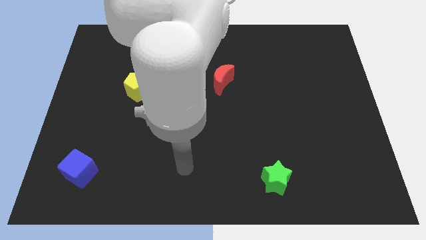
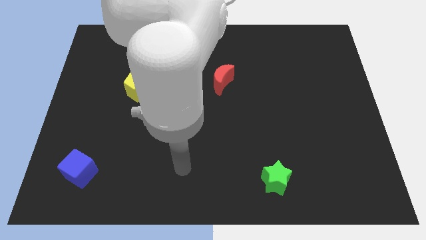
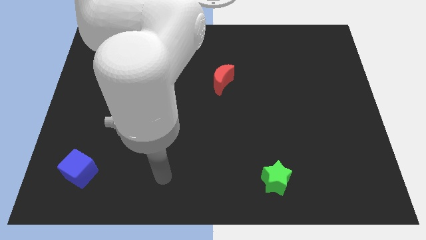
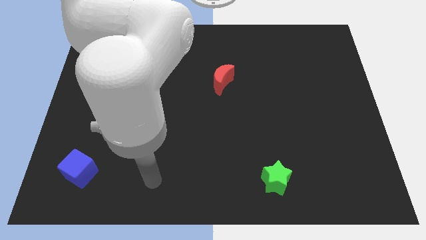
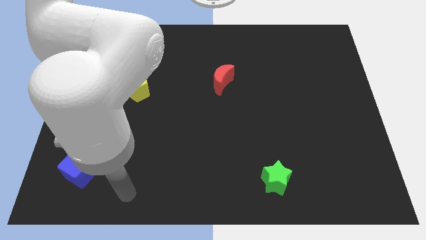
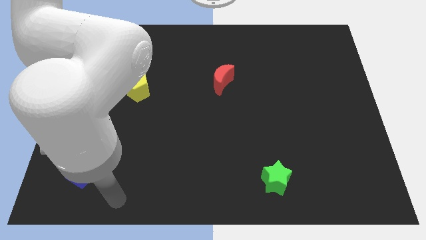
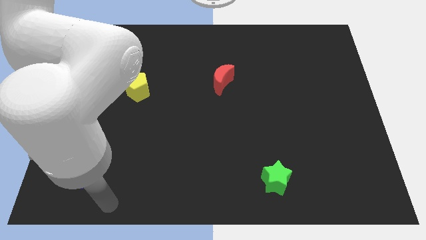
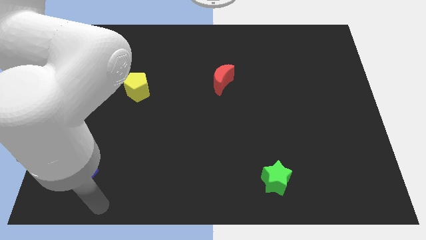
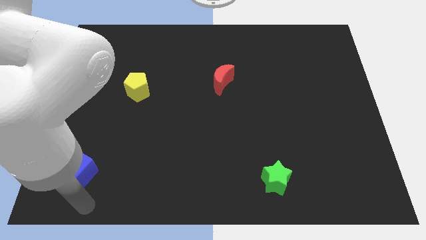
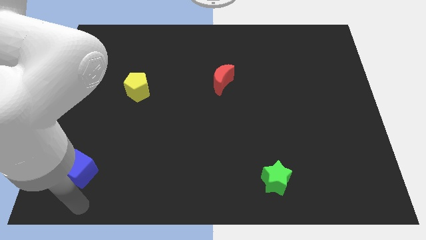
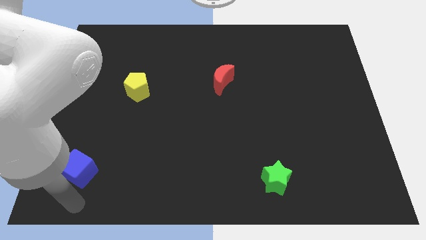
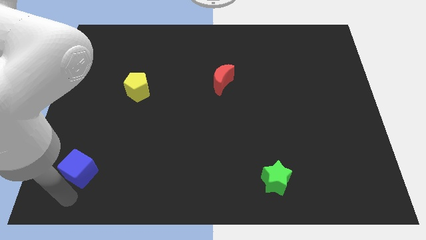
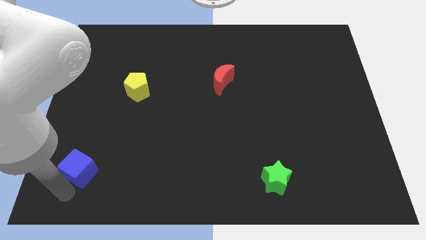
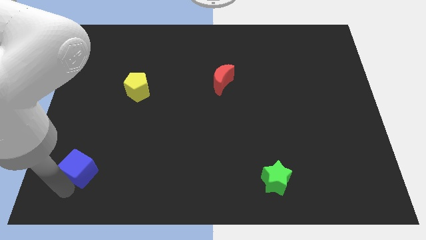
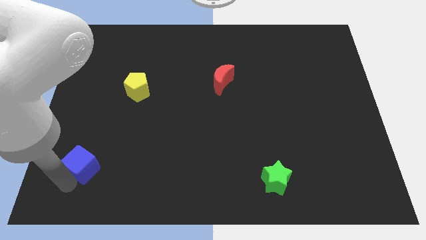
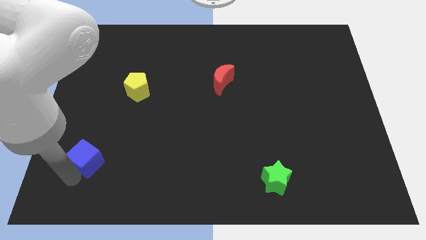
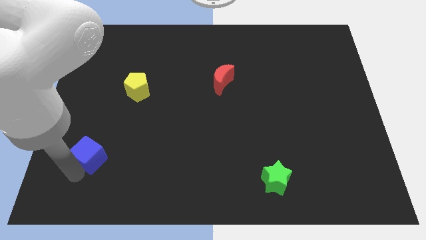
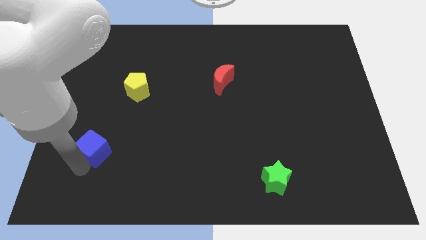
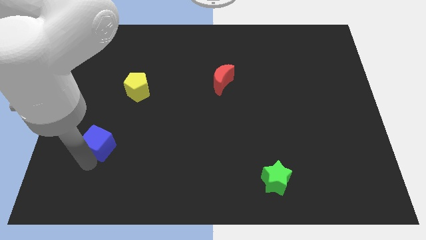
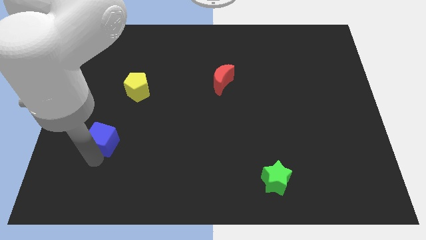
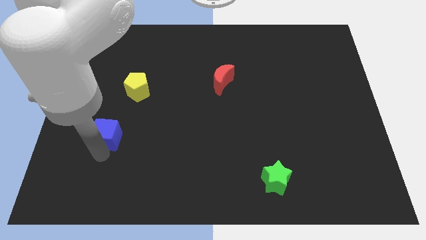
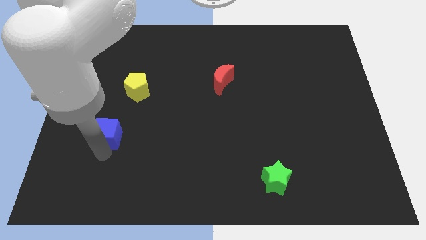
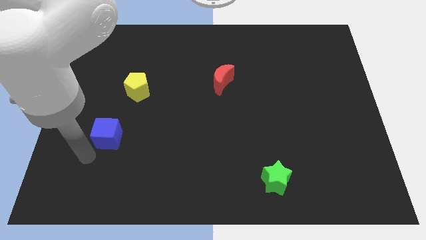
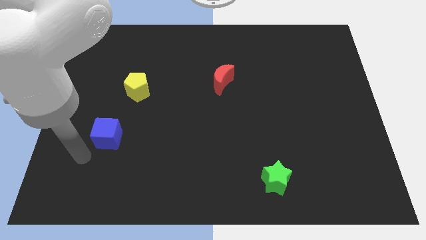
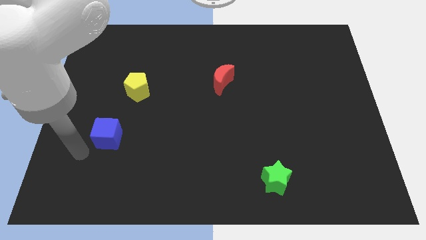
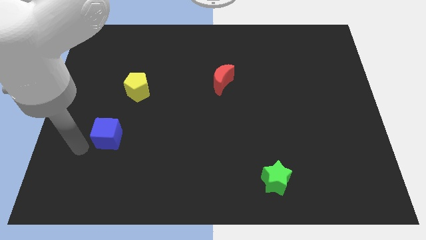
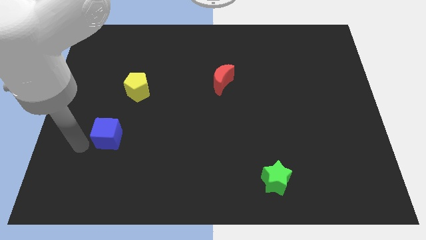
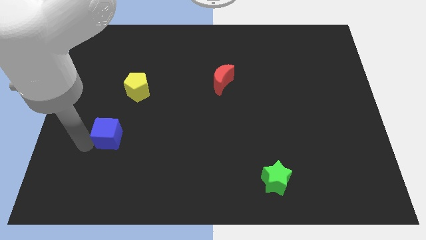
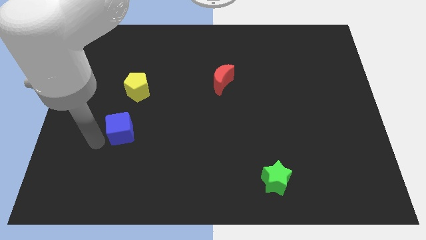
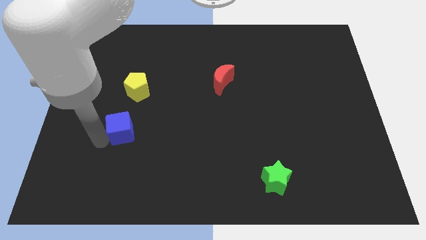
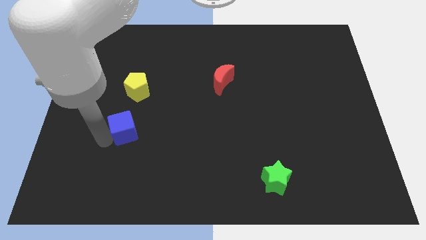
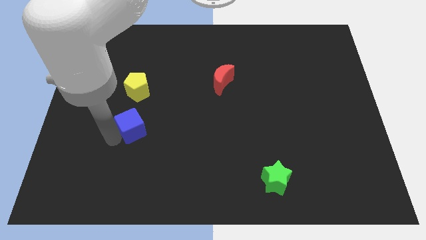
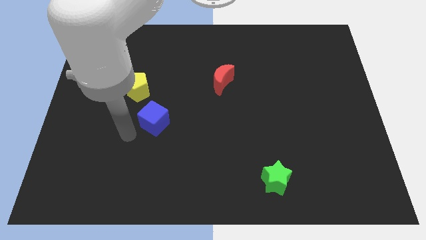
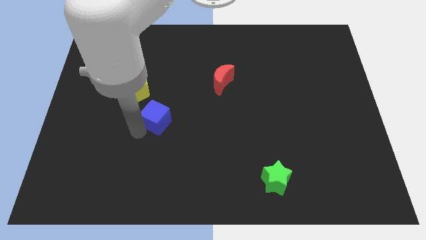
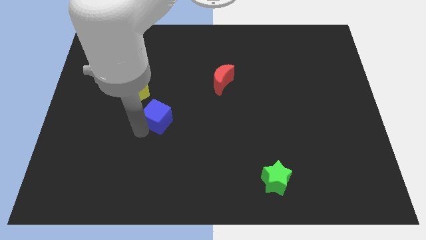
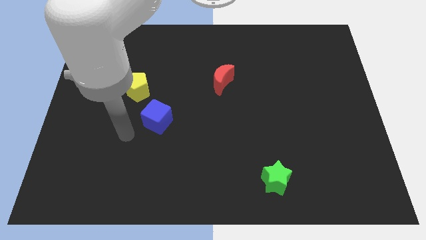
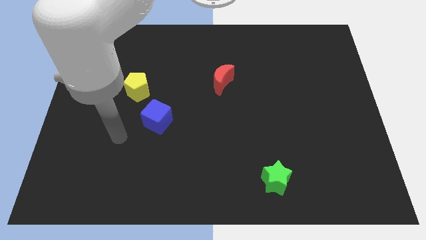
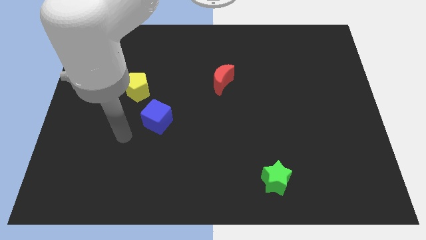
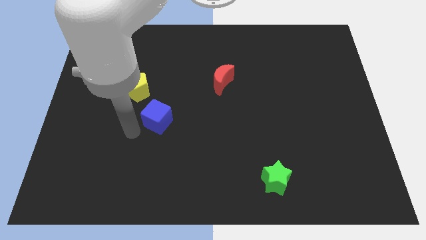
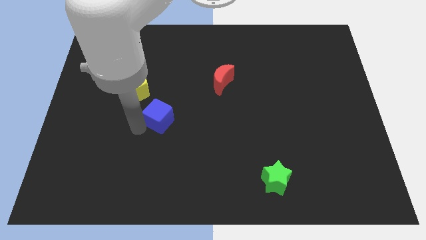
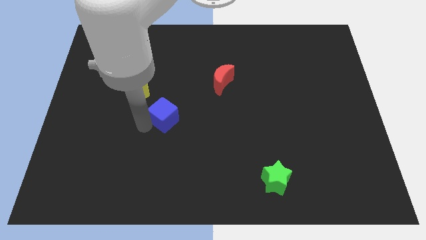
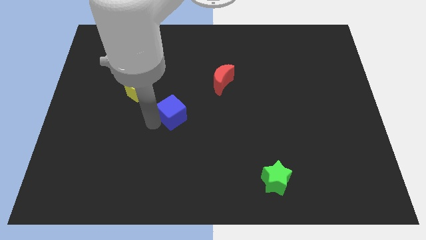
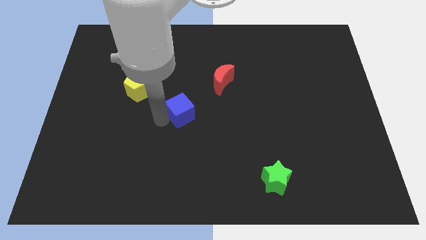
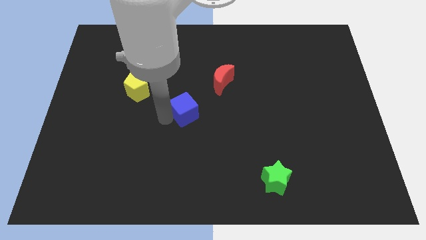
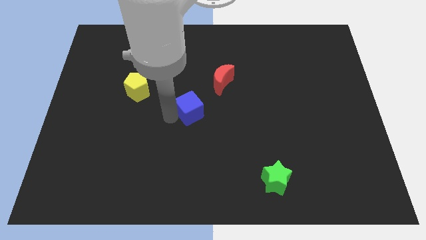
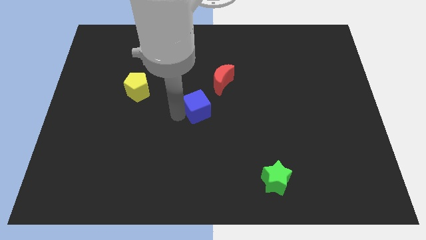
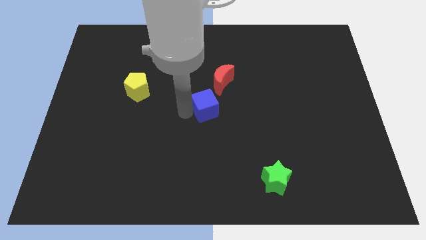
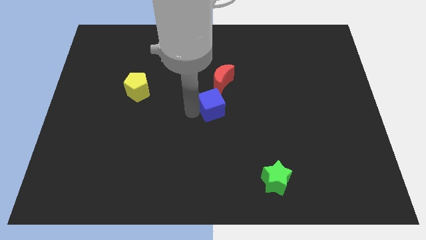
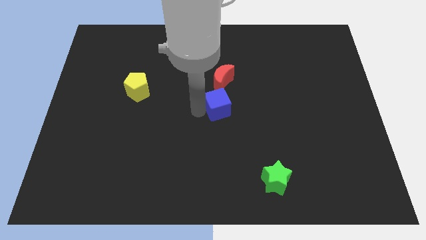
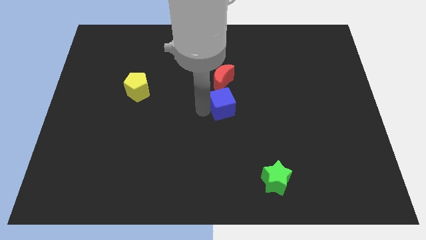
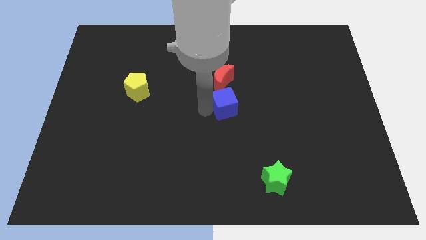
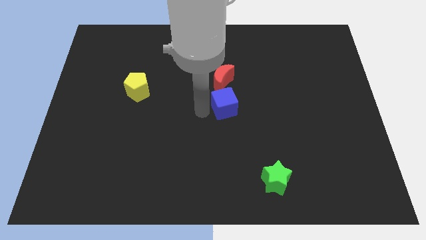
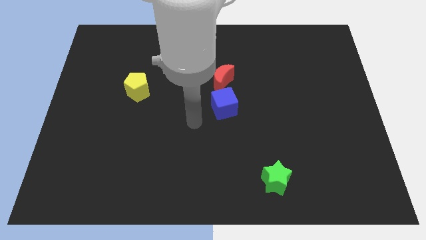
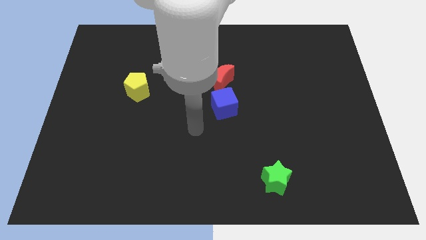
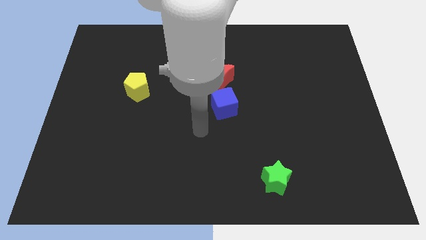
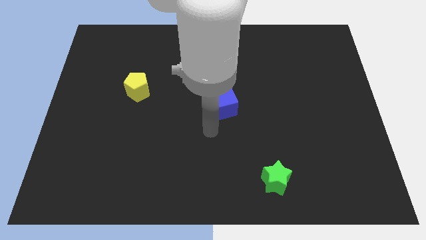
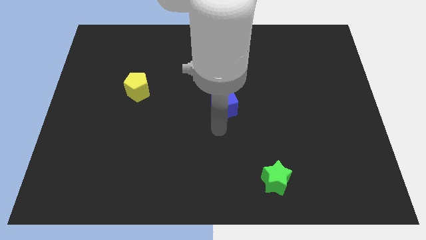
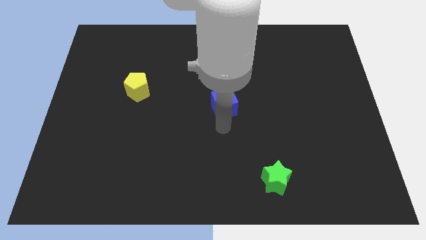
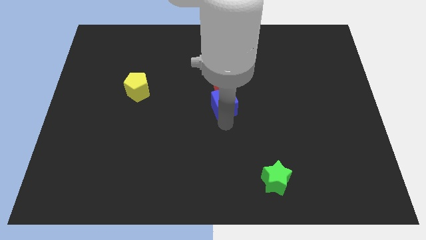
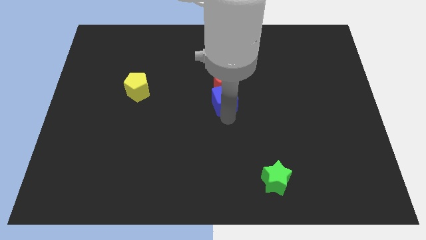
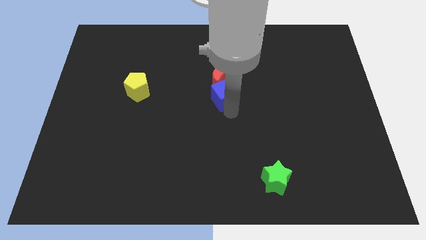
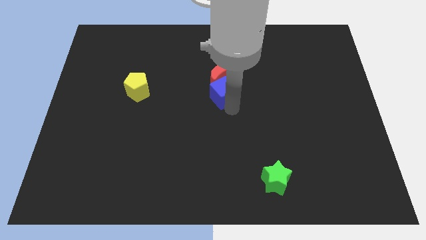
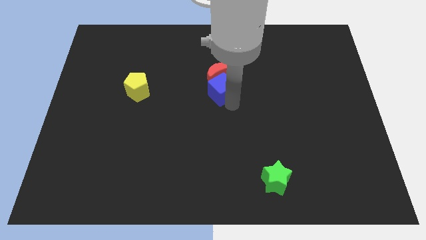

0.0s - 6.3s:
move the blue block next to the moon

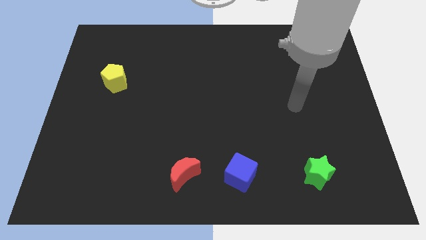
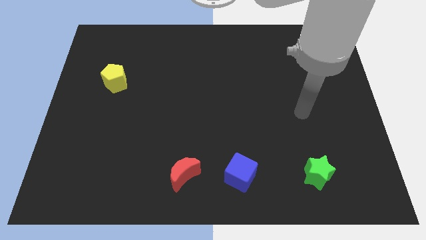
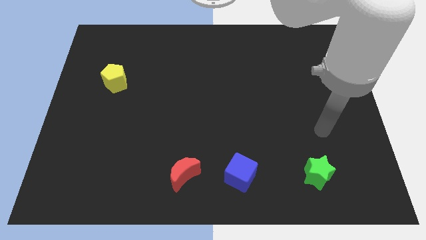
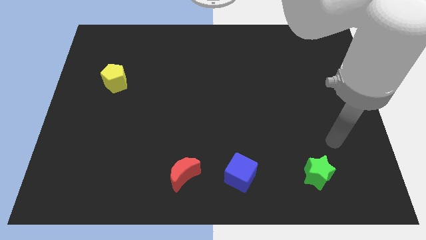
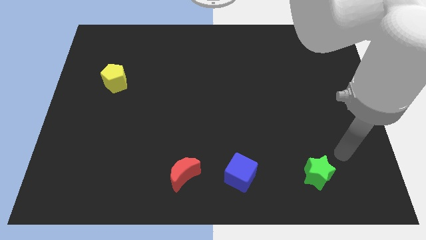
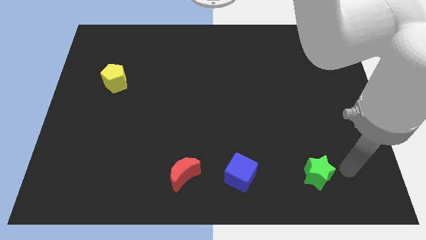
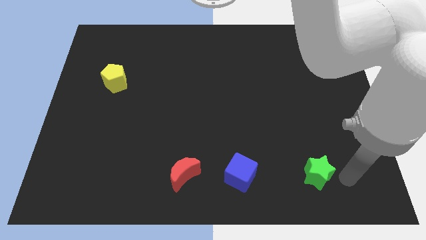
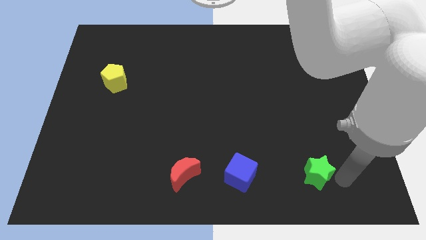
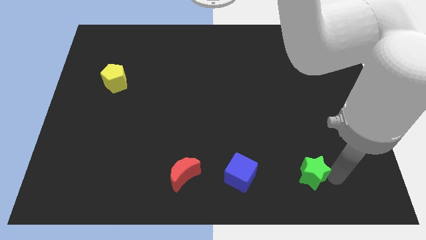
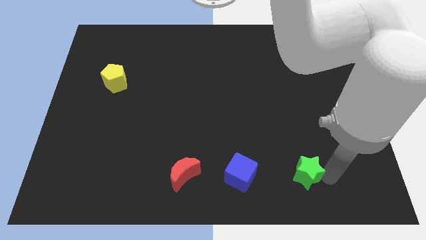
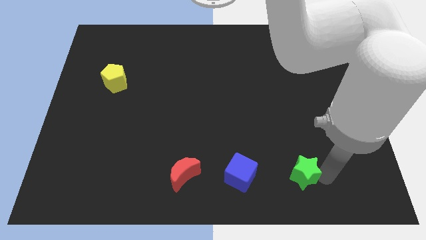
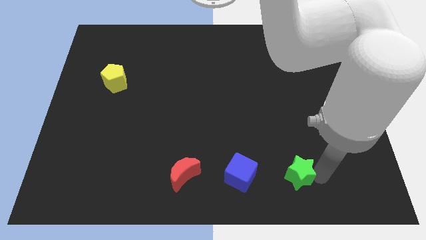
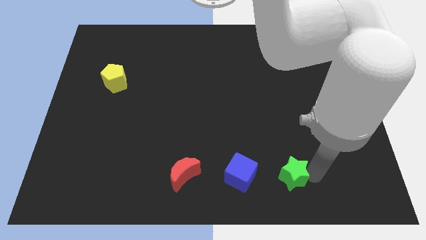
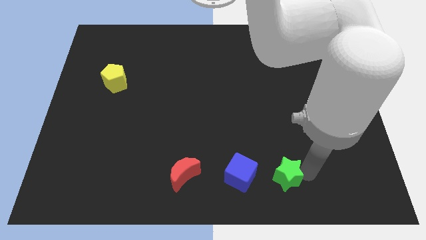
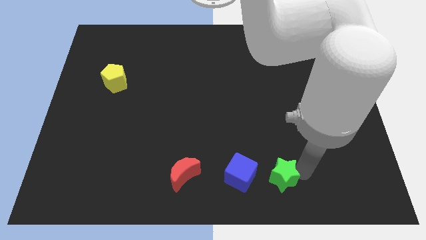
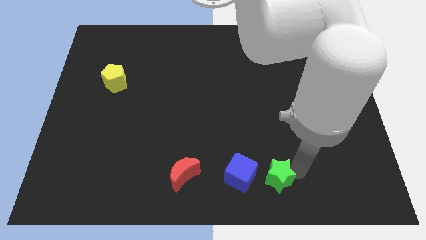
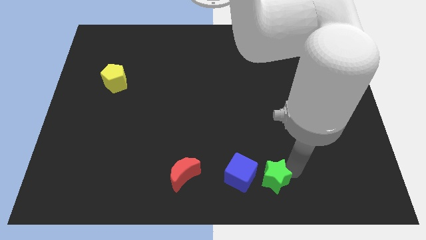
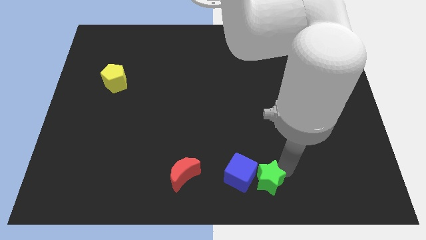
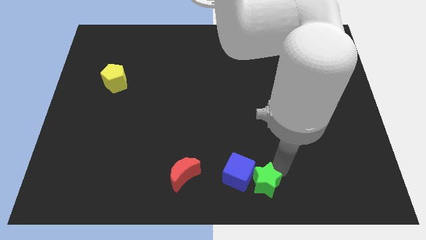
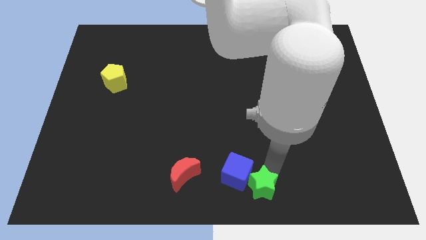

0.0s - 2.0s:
put the star close to the cube

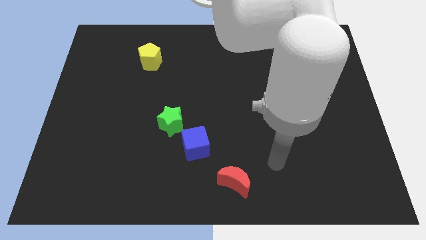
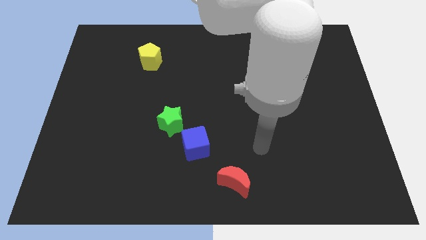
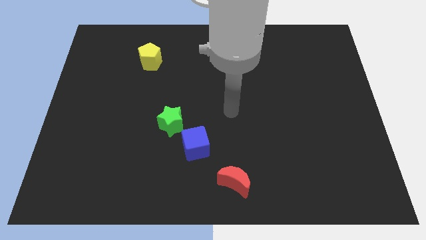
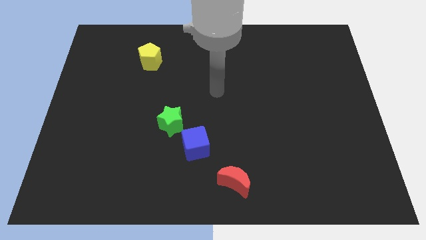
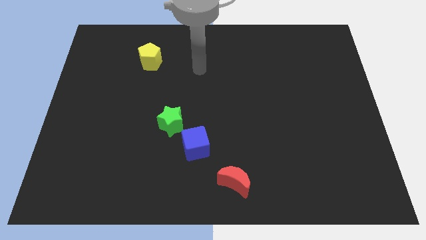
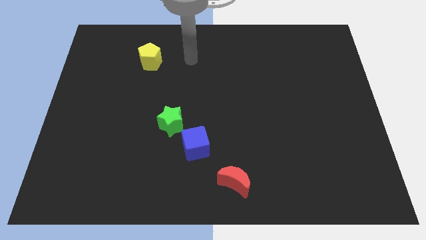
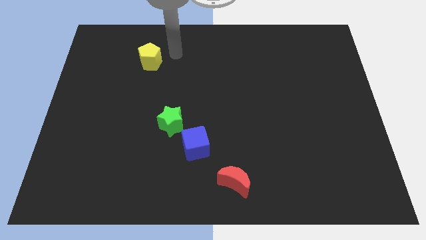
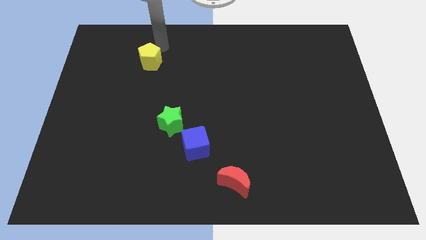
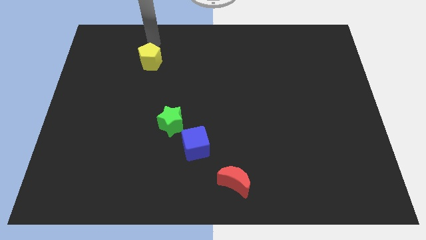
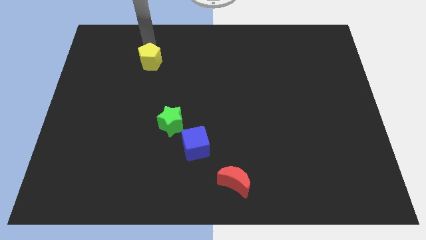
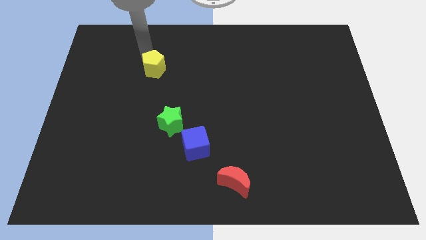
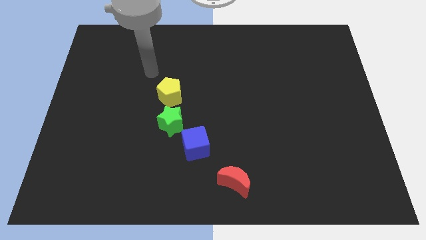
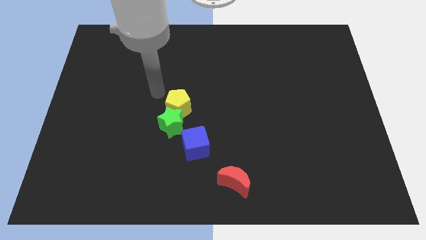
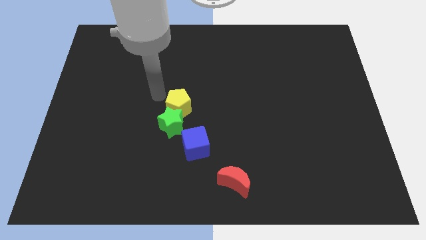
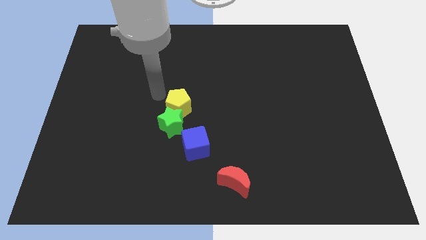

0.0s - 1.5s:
slide the yellow block next to the star
